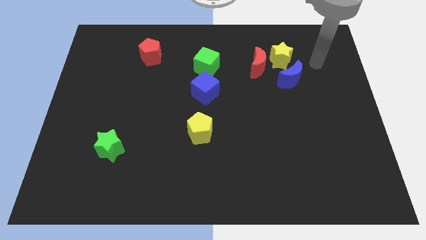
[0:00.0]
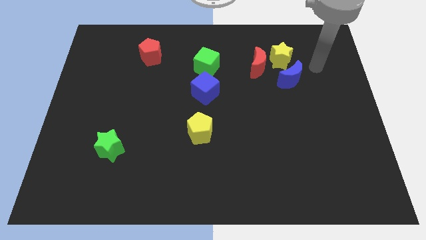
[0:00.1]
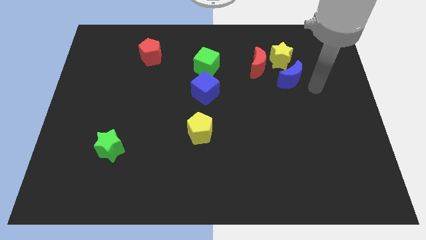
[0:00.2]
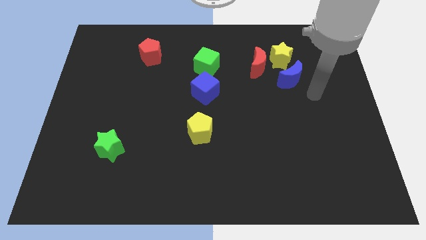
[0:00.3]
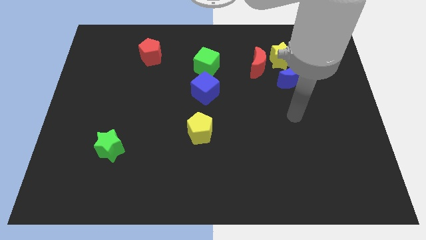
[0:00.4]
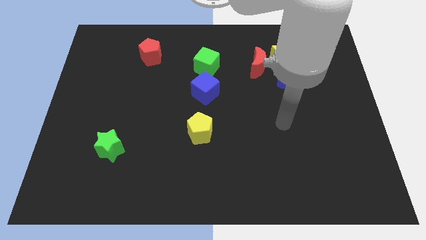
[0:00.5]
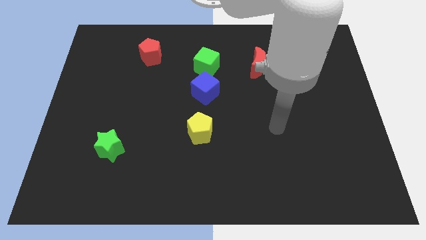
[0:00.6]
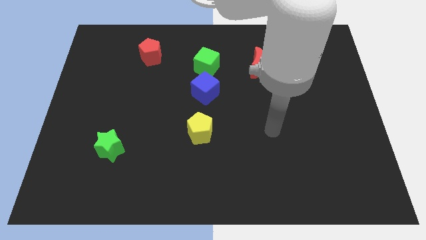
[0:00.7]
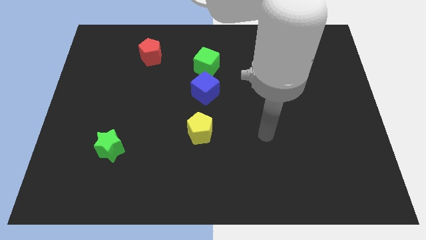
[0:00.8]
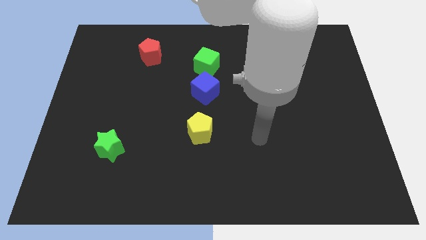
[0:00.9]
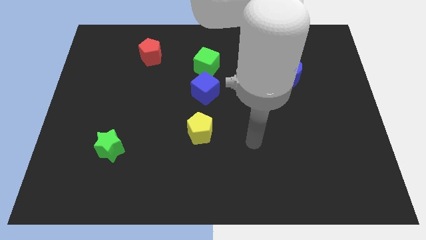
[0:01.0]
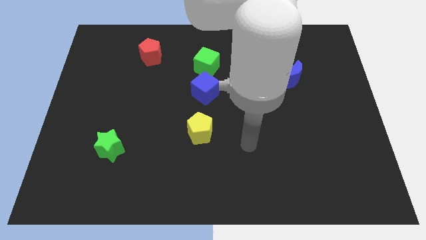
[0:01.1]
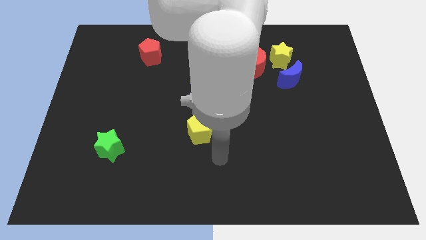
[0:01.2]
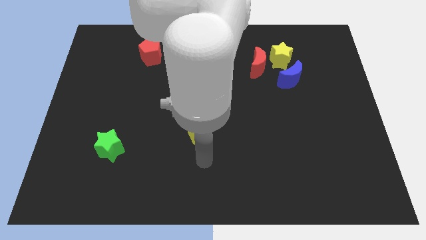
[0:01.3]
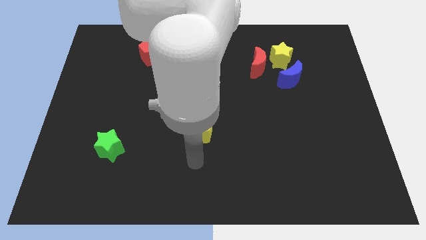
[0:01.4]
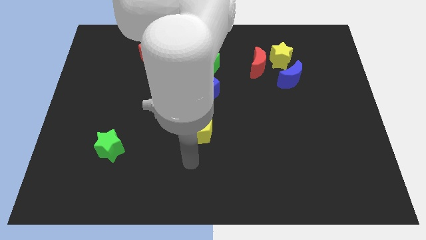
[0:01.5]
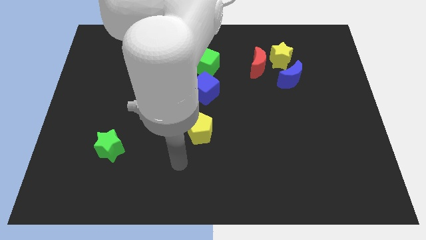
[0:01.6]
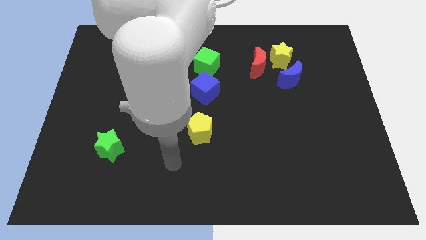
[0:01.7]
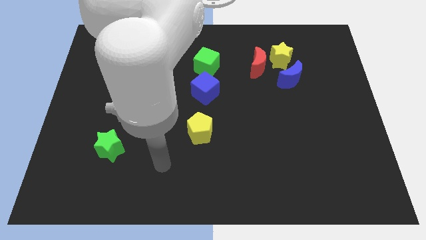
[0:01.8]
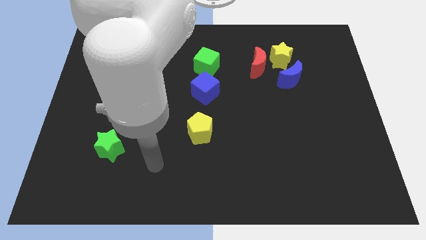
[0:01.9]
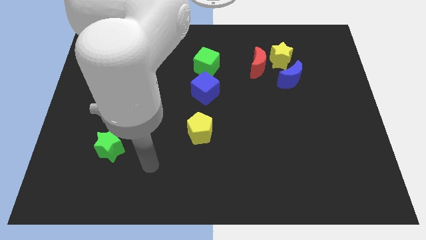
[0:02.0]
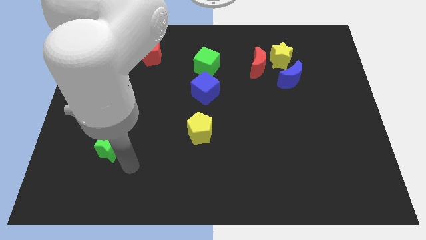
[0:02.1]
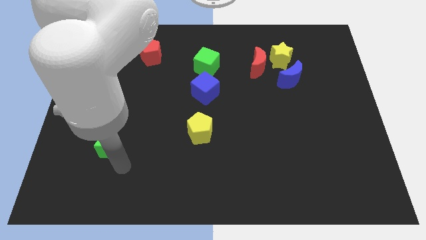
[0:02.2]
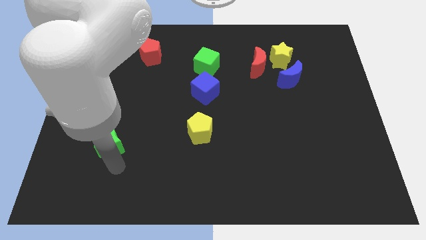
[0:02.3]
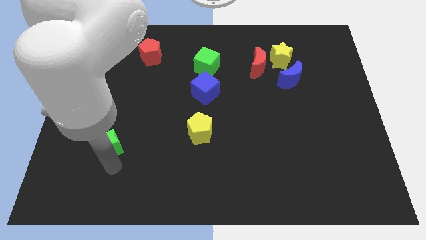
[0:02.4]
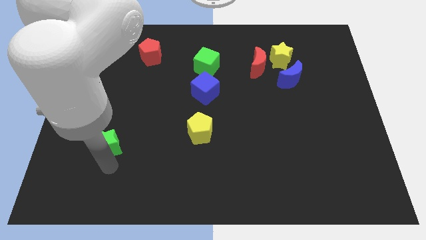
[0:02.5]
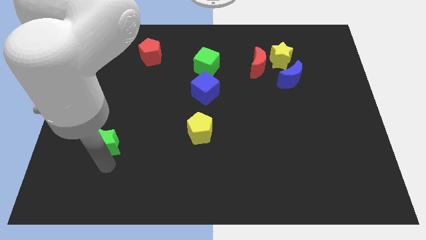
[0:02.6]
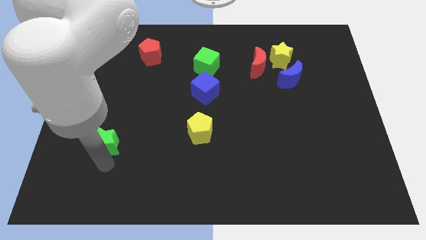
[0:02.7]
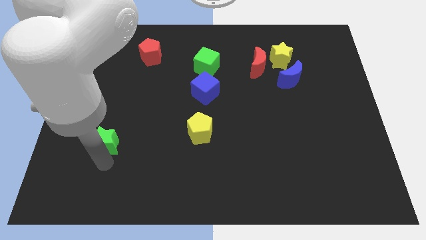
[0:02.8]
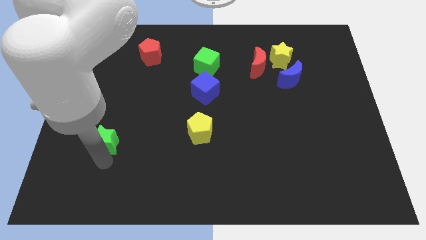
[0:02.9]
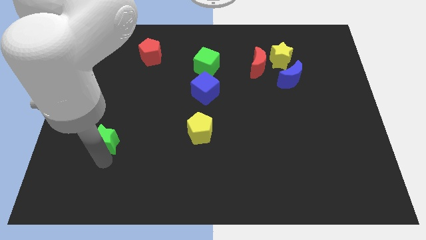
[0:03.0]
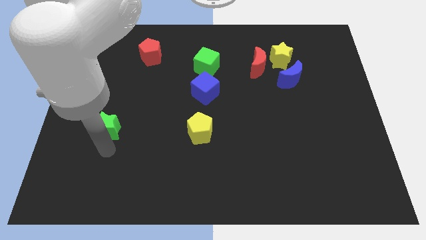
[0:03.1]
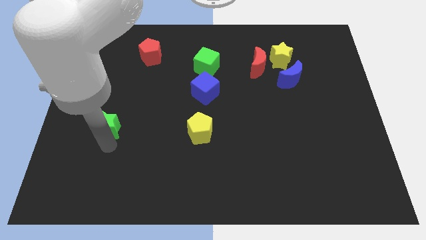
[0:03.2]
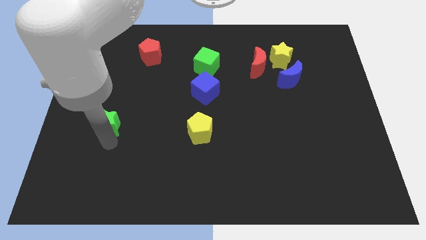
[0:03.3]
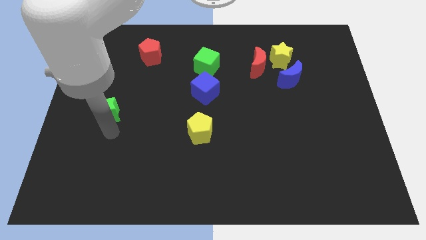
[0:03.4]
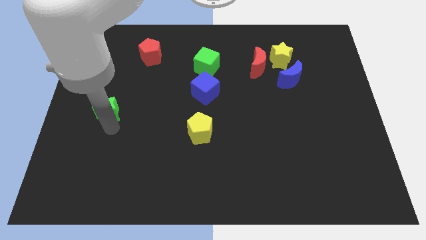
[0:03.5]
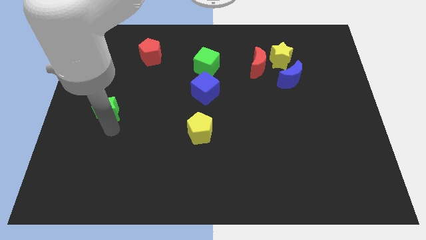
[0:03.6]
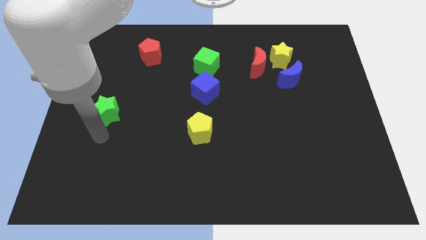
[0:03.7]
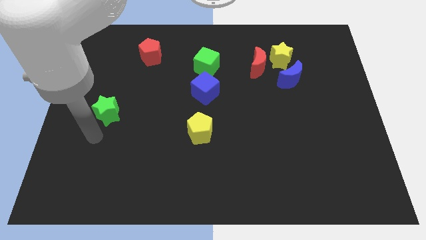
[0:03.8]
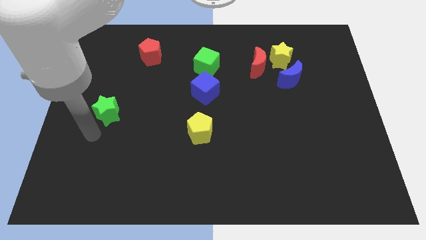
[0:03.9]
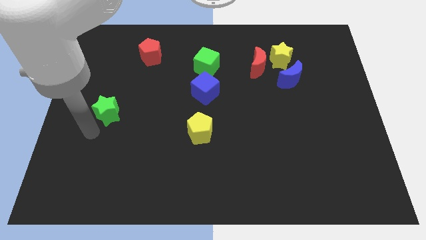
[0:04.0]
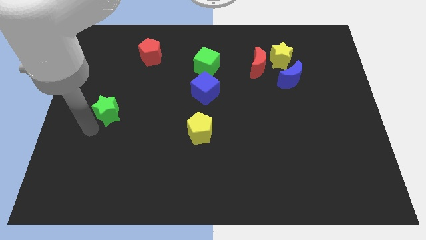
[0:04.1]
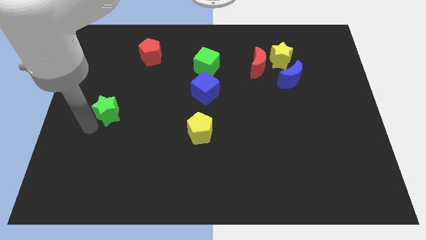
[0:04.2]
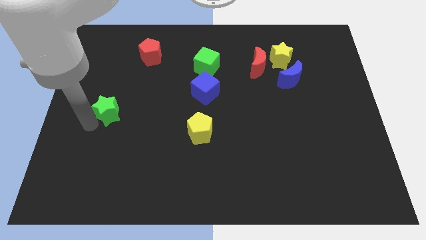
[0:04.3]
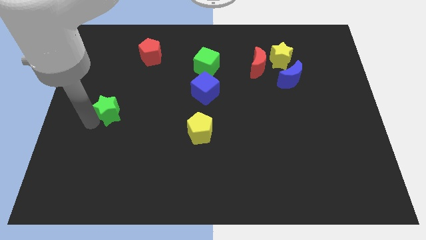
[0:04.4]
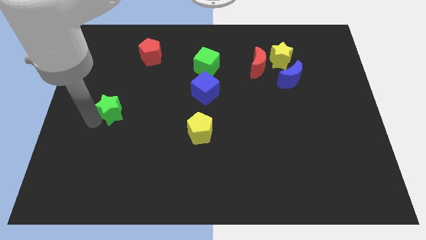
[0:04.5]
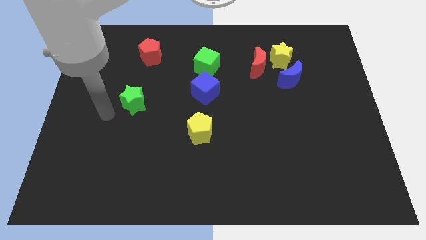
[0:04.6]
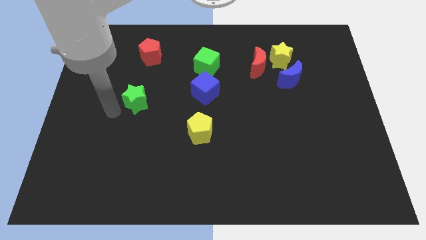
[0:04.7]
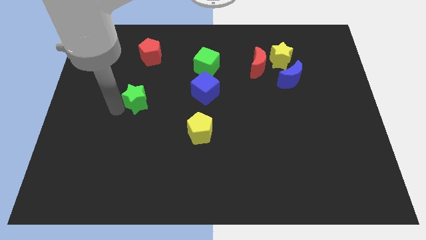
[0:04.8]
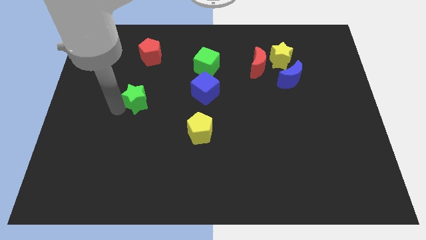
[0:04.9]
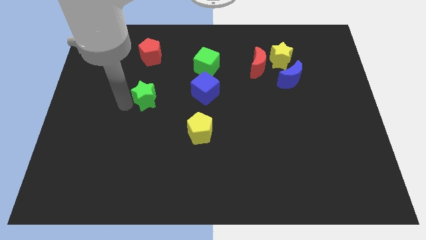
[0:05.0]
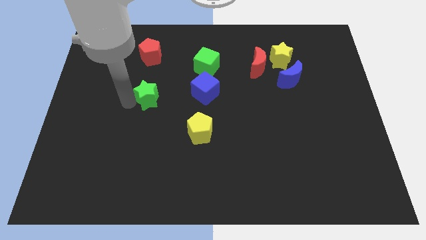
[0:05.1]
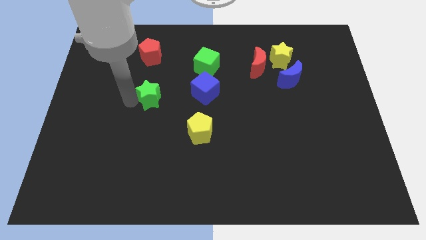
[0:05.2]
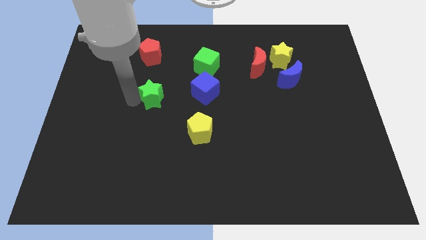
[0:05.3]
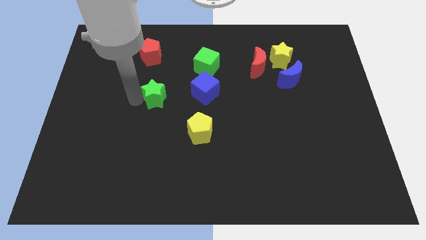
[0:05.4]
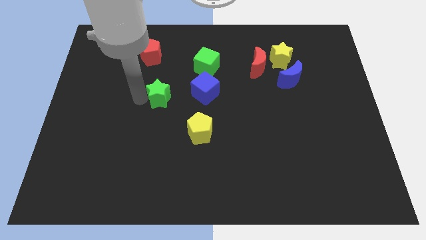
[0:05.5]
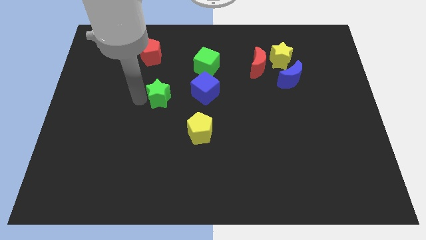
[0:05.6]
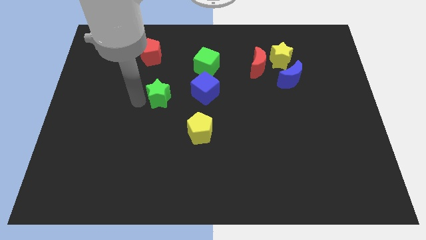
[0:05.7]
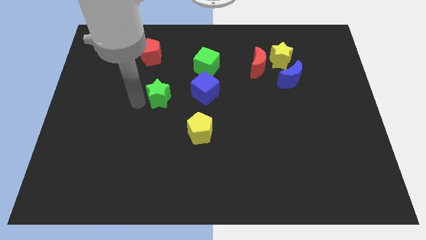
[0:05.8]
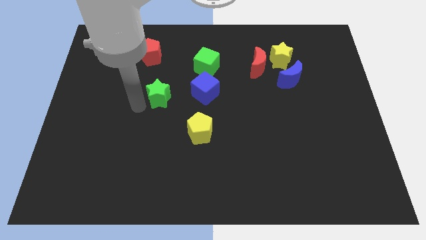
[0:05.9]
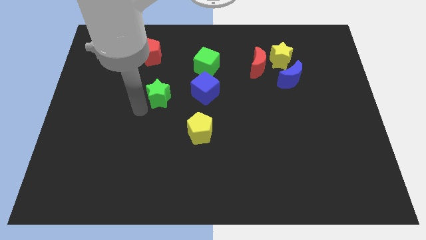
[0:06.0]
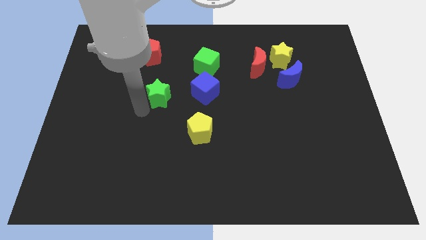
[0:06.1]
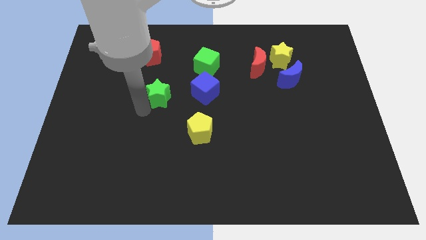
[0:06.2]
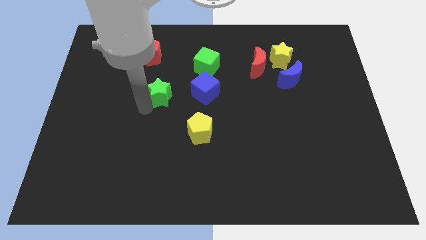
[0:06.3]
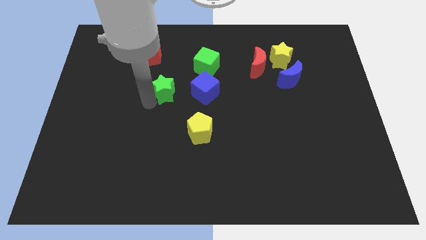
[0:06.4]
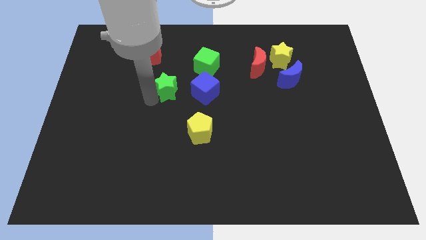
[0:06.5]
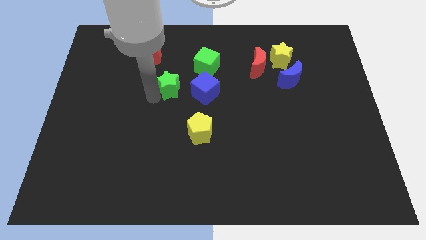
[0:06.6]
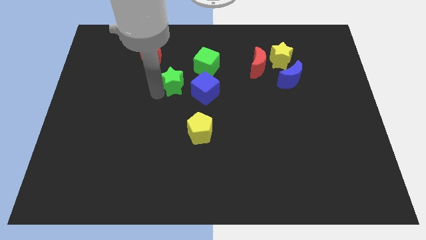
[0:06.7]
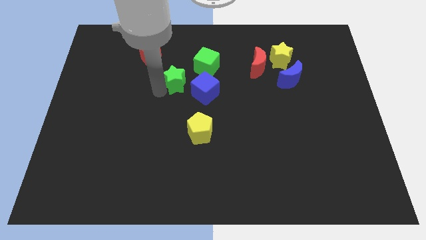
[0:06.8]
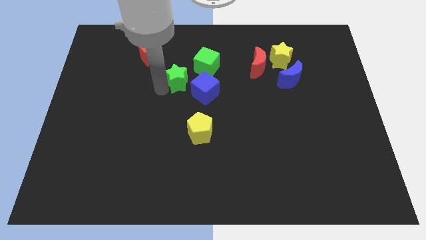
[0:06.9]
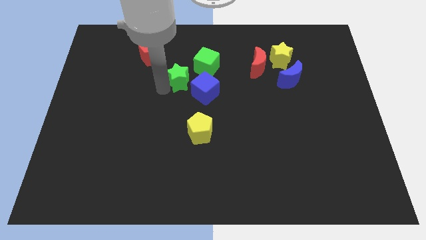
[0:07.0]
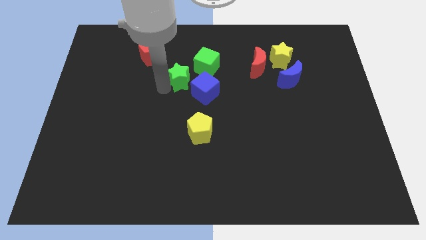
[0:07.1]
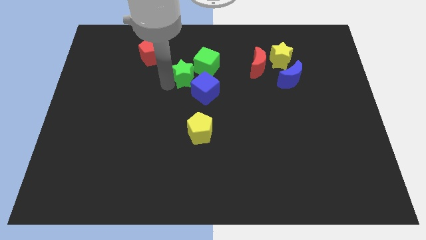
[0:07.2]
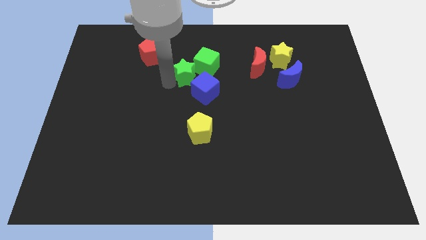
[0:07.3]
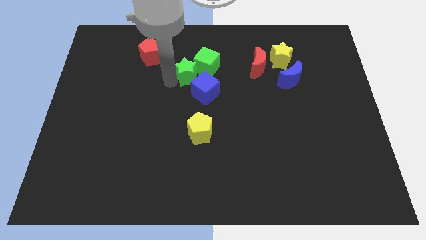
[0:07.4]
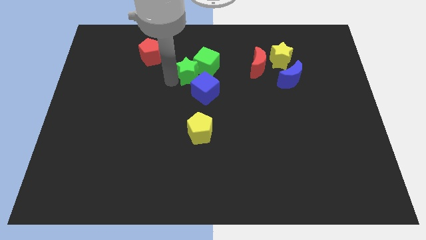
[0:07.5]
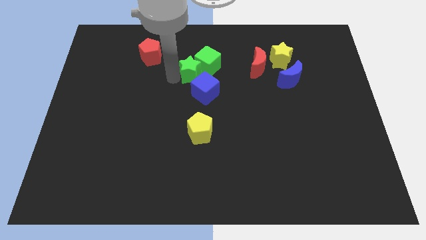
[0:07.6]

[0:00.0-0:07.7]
move the green star towards the green cube
